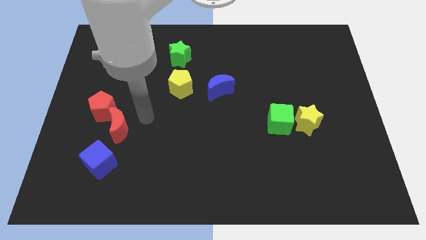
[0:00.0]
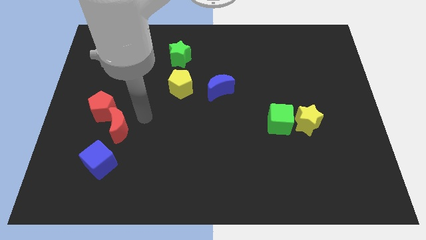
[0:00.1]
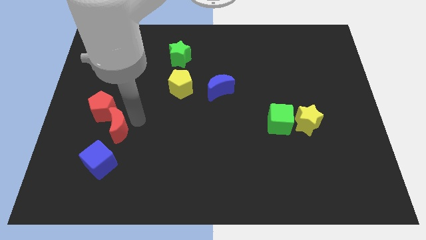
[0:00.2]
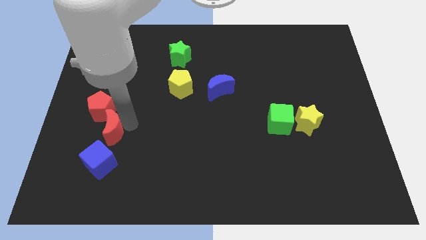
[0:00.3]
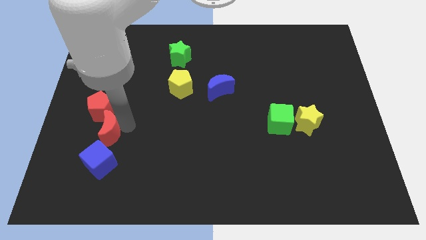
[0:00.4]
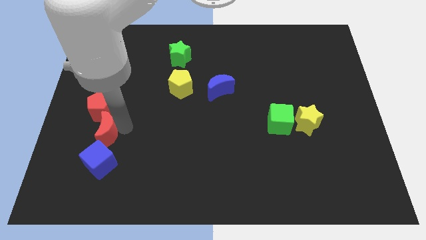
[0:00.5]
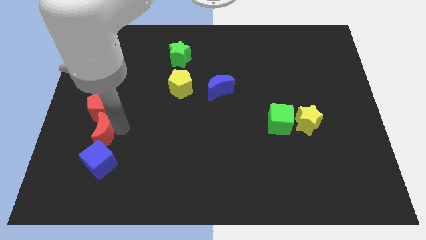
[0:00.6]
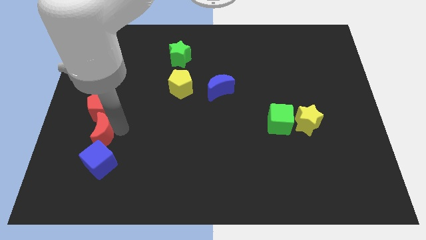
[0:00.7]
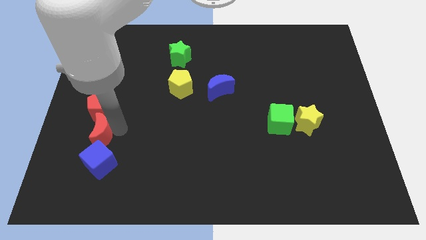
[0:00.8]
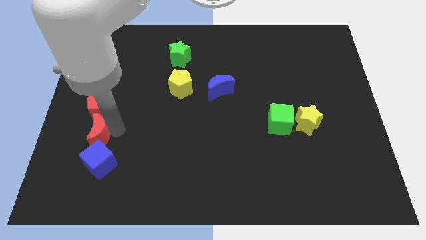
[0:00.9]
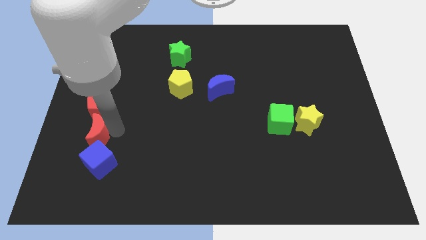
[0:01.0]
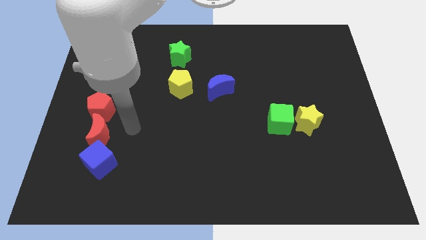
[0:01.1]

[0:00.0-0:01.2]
move the red crescent in between red pentagon and blue cube

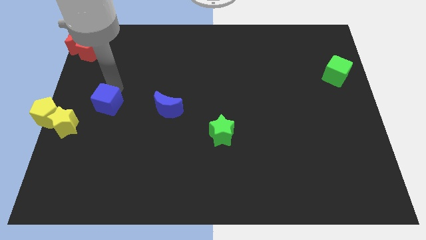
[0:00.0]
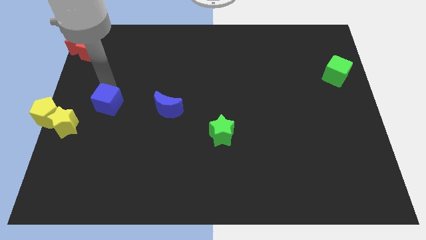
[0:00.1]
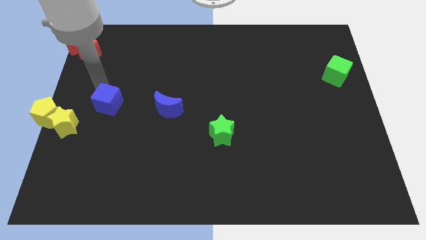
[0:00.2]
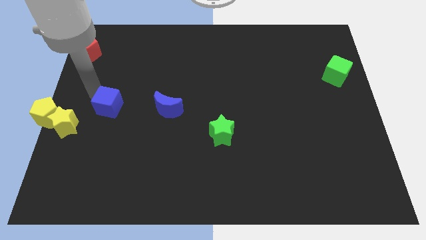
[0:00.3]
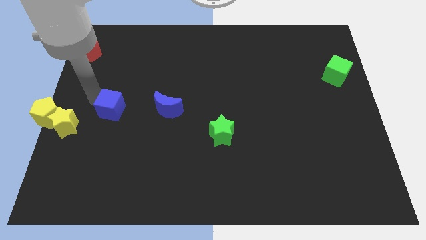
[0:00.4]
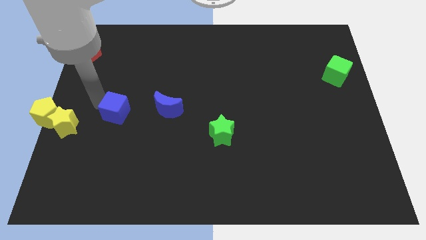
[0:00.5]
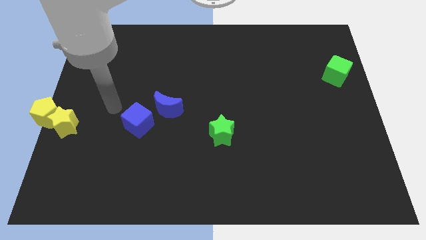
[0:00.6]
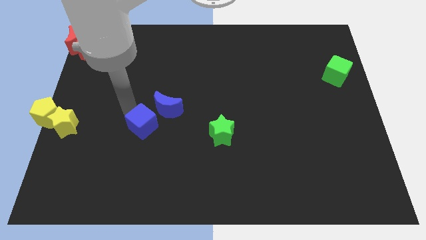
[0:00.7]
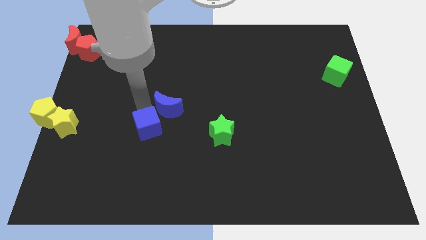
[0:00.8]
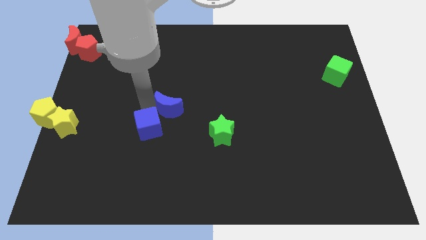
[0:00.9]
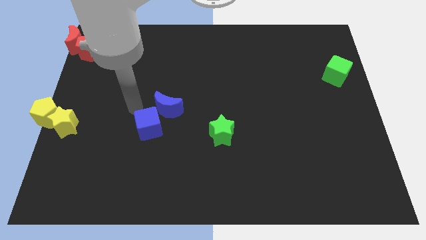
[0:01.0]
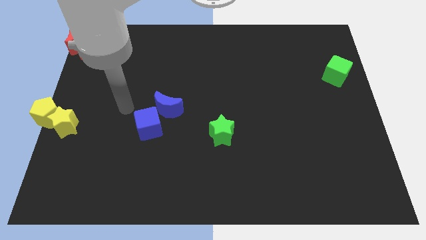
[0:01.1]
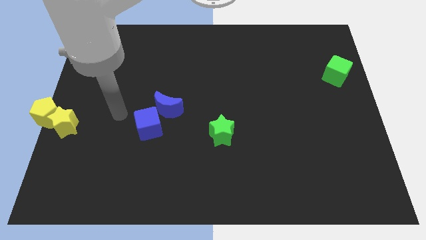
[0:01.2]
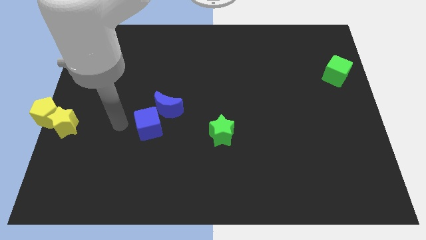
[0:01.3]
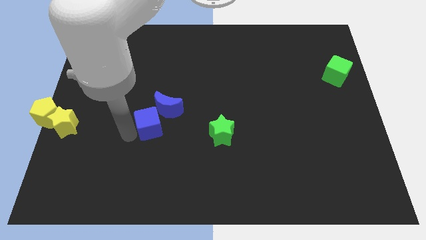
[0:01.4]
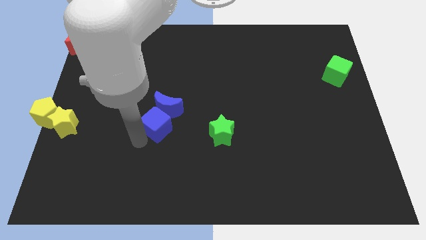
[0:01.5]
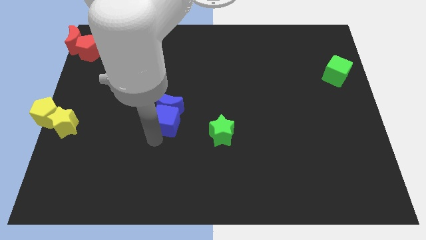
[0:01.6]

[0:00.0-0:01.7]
move the blue cube to the bottom of the blue moon

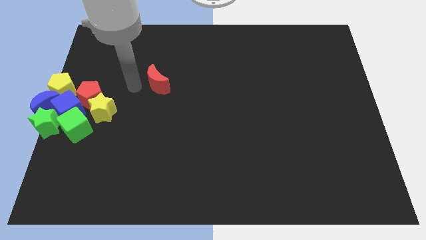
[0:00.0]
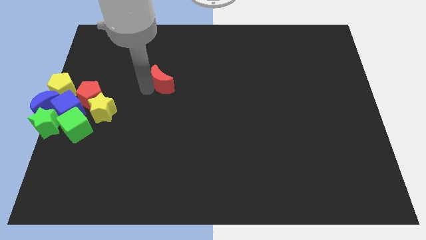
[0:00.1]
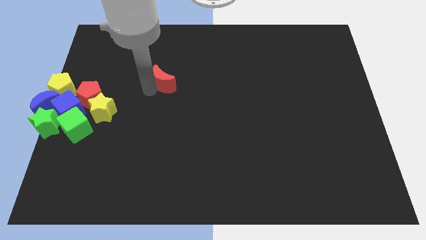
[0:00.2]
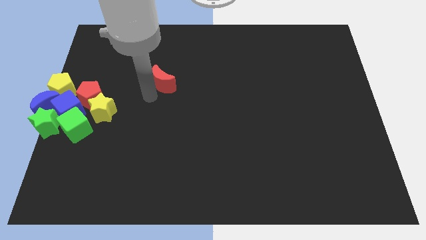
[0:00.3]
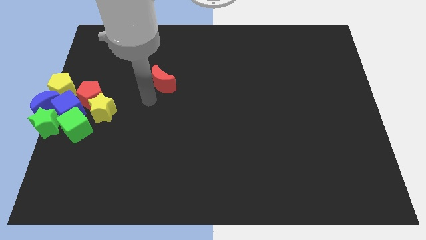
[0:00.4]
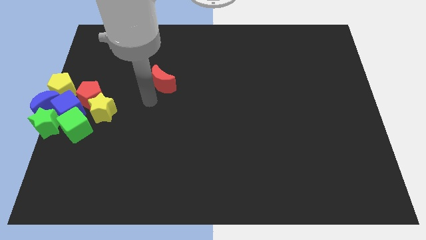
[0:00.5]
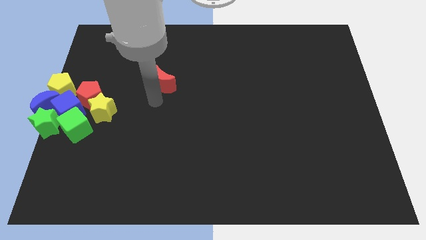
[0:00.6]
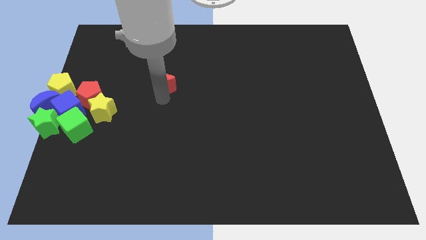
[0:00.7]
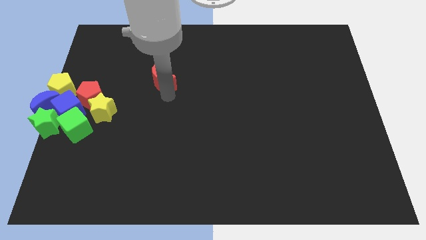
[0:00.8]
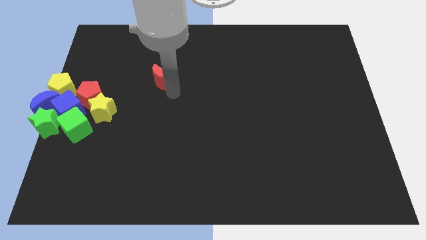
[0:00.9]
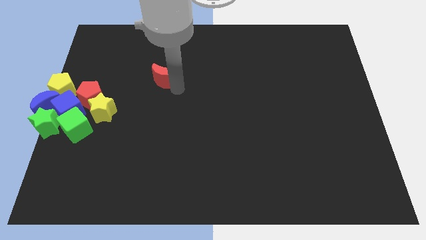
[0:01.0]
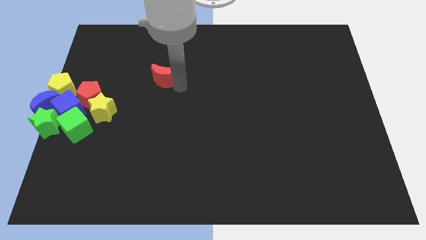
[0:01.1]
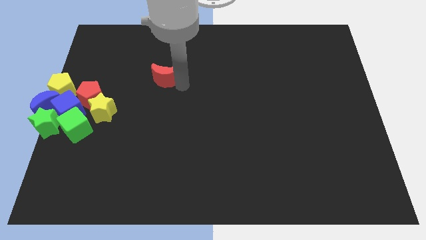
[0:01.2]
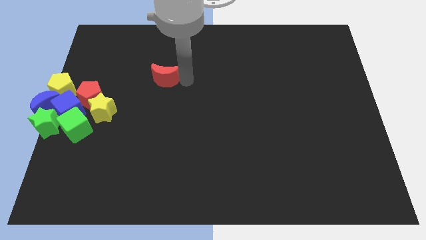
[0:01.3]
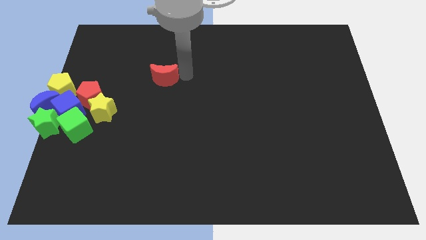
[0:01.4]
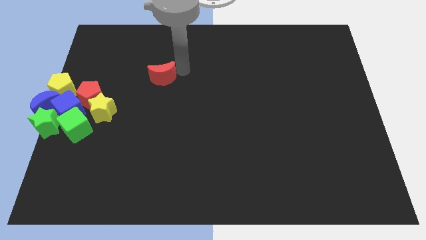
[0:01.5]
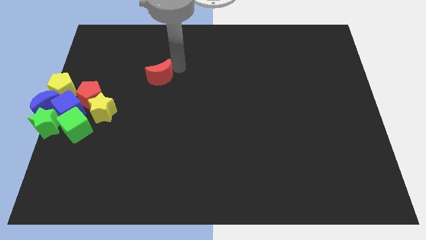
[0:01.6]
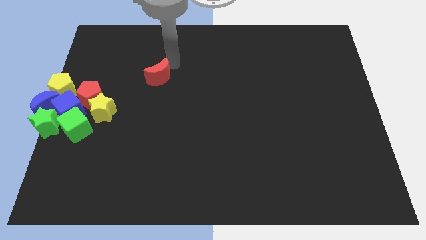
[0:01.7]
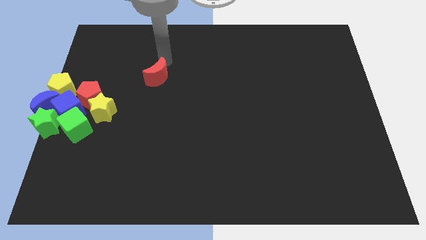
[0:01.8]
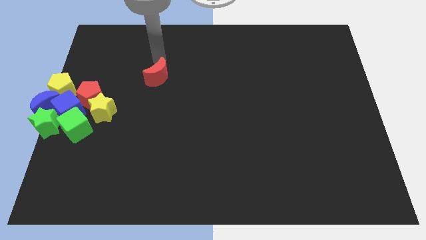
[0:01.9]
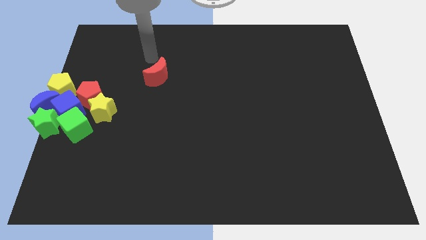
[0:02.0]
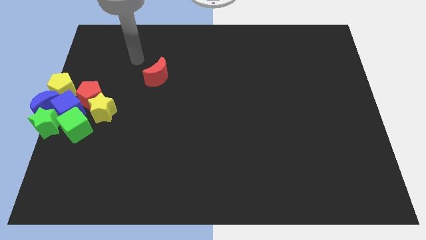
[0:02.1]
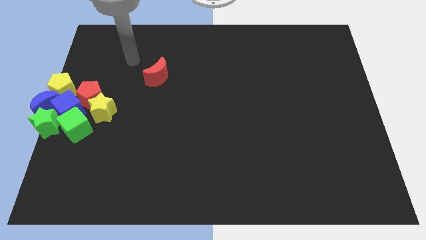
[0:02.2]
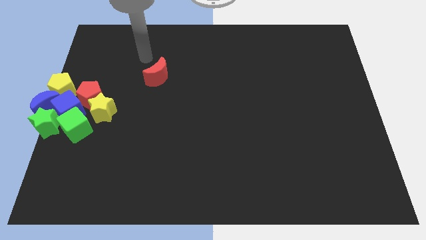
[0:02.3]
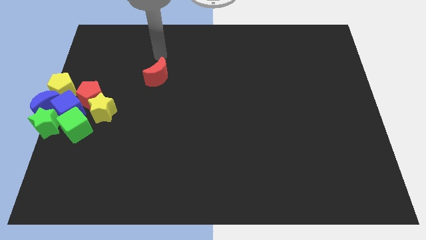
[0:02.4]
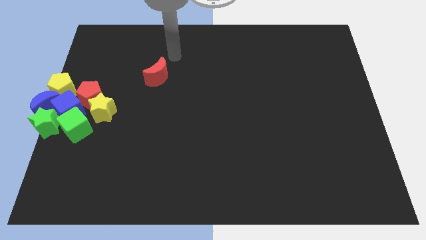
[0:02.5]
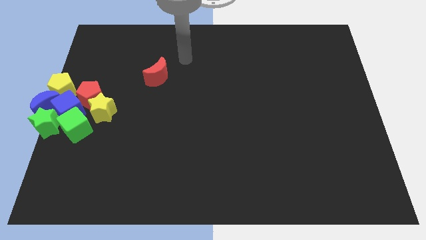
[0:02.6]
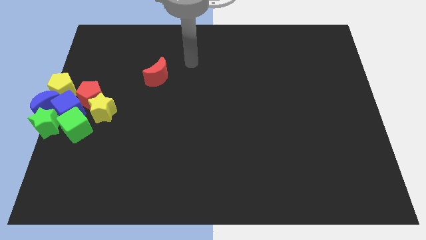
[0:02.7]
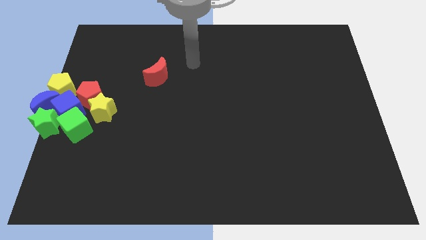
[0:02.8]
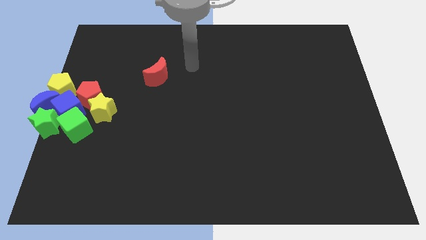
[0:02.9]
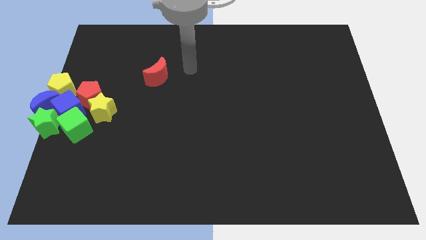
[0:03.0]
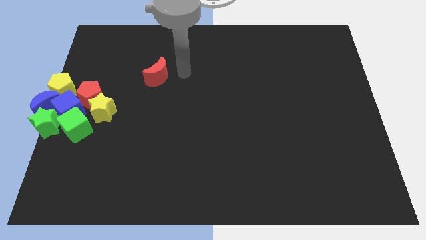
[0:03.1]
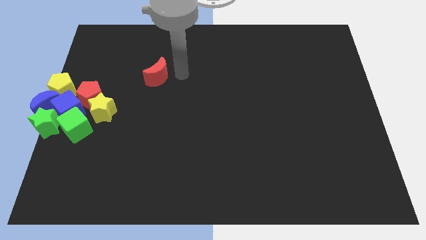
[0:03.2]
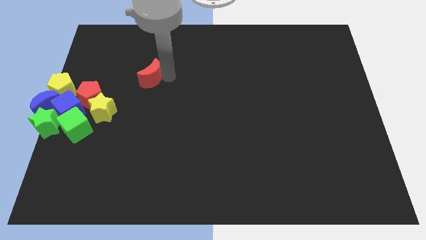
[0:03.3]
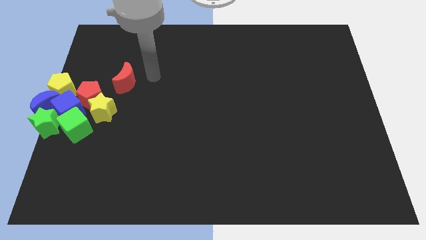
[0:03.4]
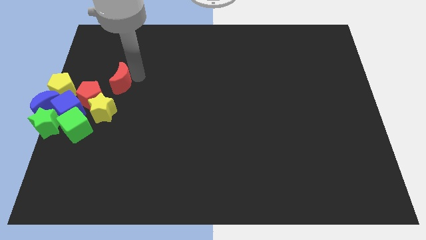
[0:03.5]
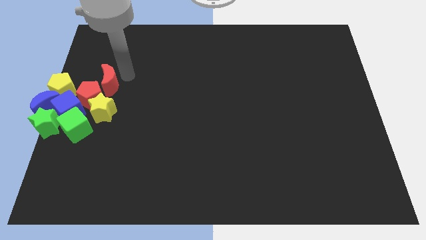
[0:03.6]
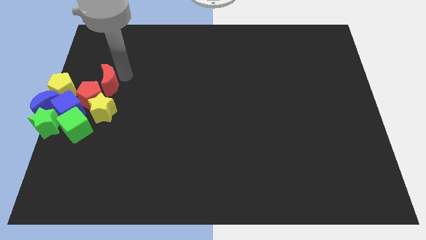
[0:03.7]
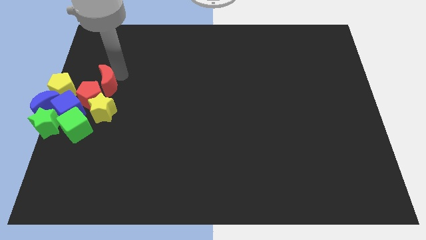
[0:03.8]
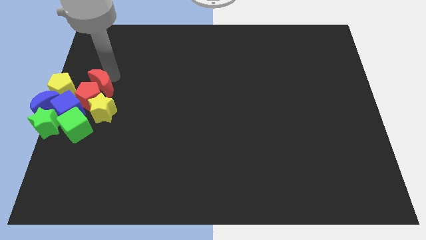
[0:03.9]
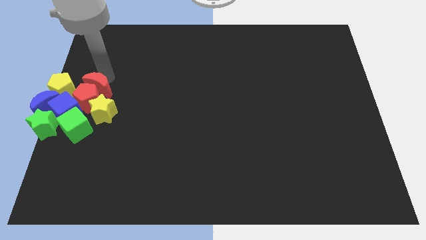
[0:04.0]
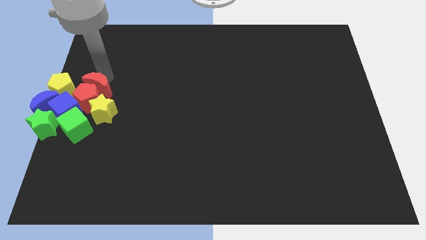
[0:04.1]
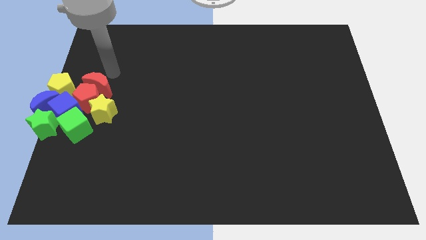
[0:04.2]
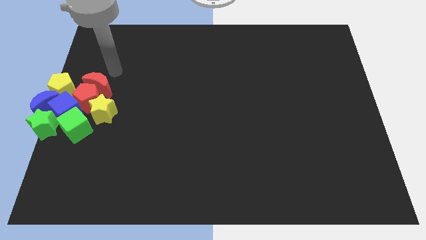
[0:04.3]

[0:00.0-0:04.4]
push the red moon into the red pentagon

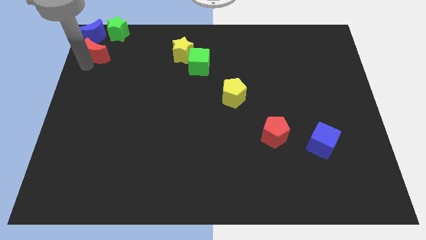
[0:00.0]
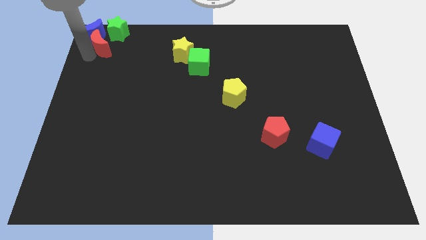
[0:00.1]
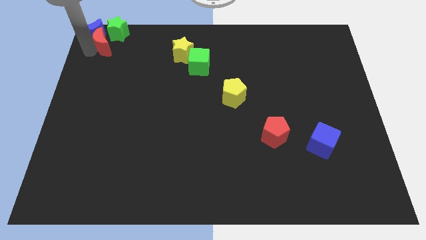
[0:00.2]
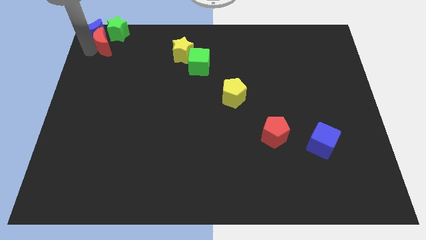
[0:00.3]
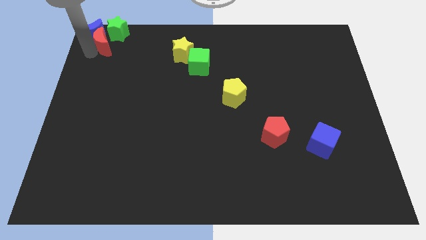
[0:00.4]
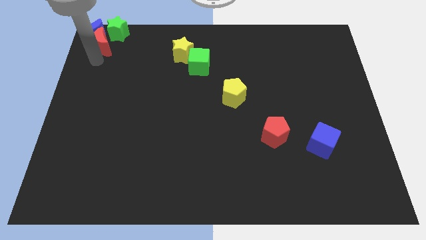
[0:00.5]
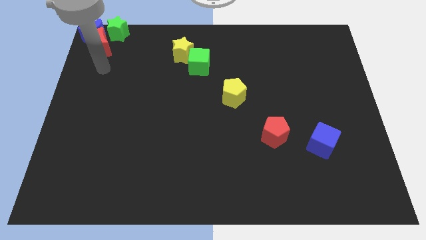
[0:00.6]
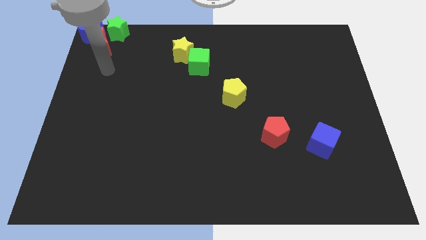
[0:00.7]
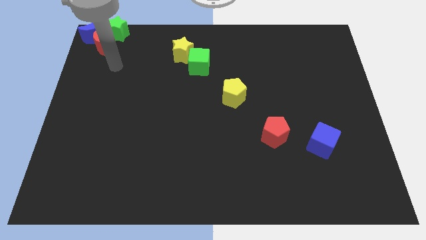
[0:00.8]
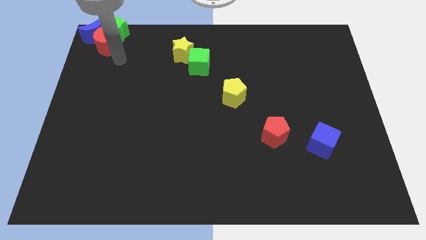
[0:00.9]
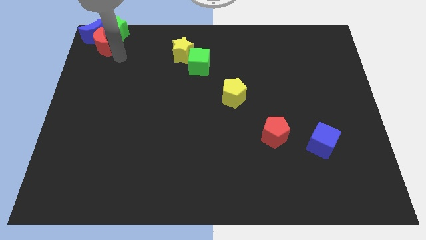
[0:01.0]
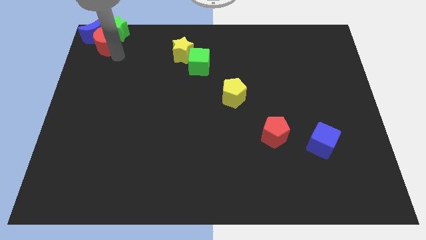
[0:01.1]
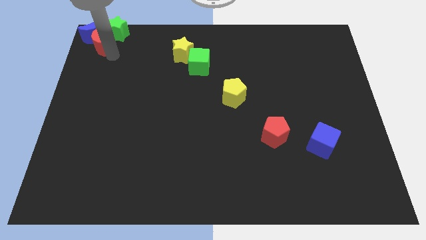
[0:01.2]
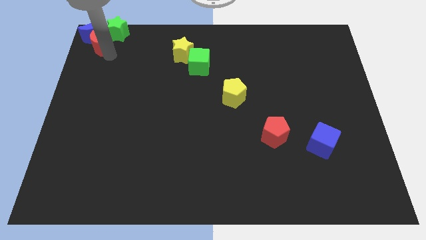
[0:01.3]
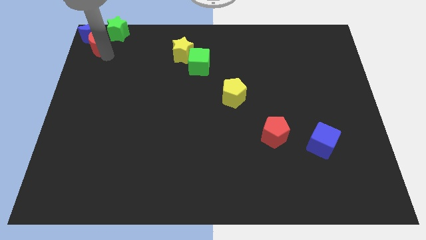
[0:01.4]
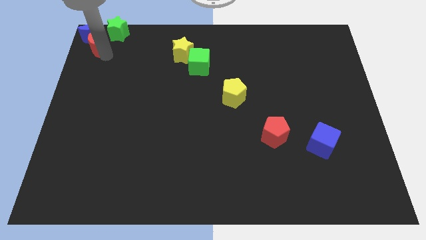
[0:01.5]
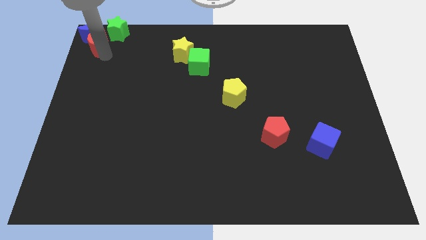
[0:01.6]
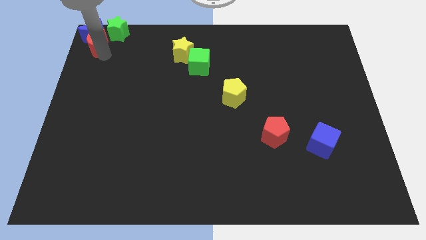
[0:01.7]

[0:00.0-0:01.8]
place the red crescent on the bottom side of the blue moon
